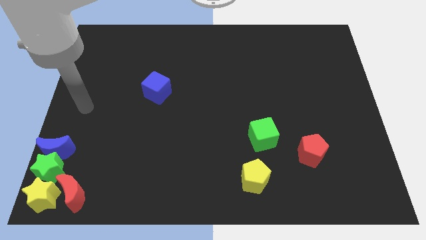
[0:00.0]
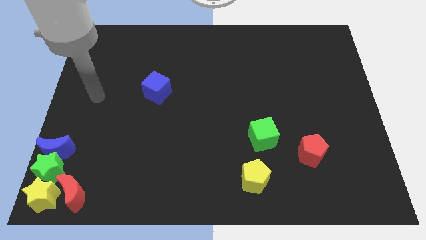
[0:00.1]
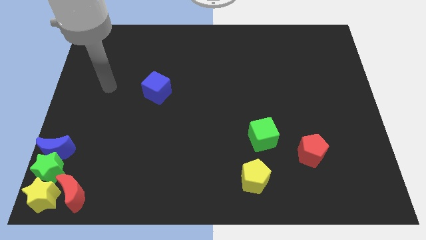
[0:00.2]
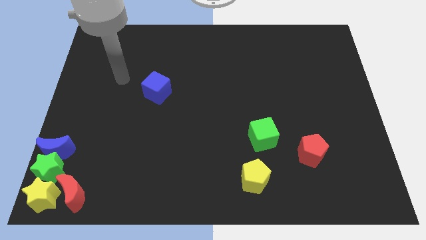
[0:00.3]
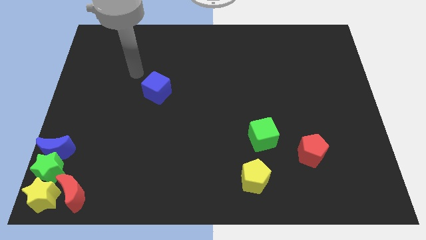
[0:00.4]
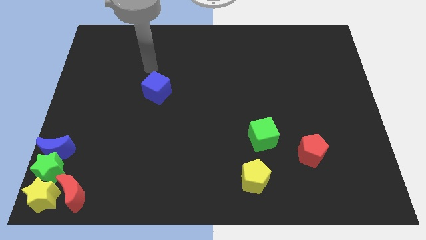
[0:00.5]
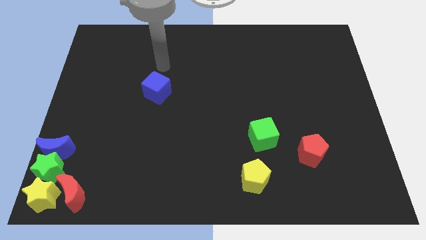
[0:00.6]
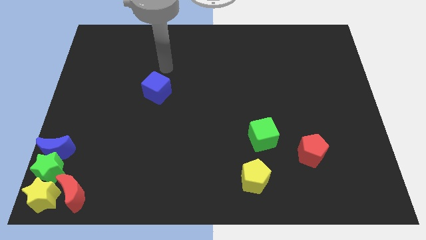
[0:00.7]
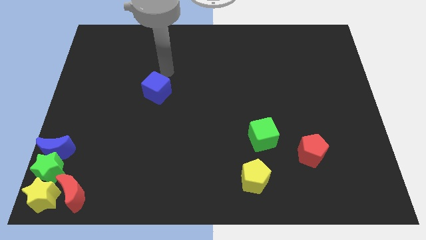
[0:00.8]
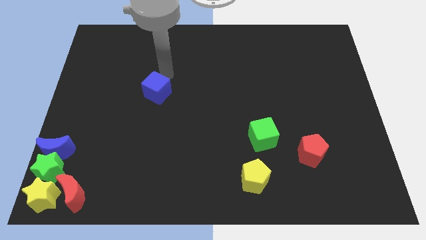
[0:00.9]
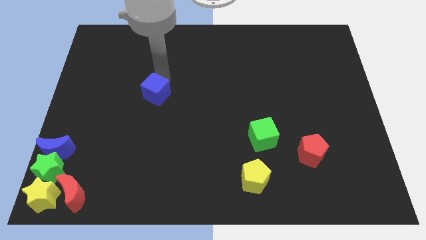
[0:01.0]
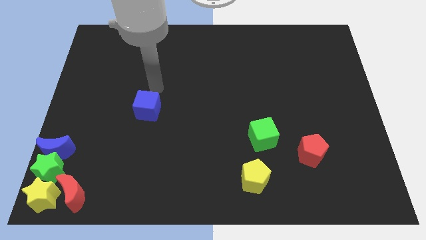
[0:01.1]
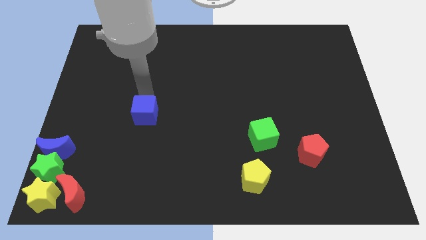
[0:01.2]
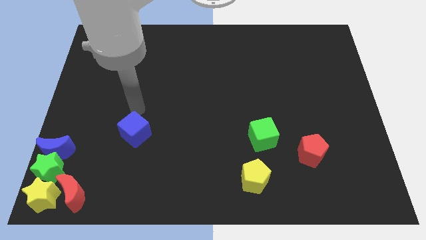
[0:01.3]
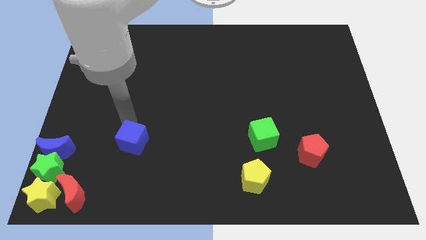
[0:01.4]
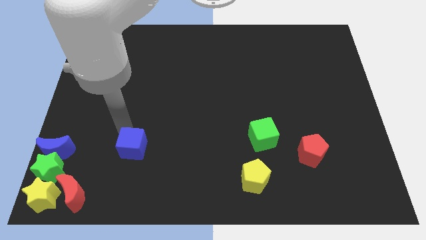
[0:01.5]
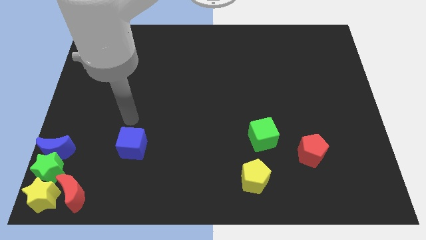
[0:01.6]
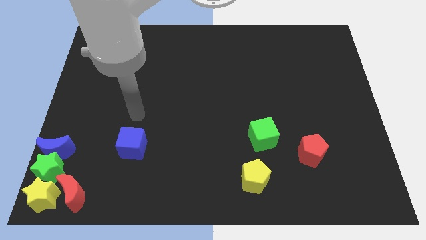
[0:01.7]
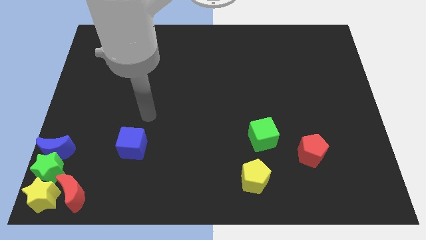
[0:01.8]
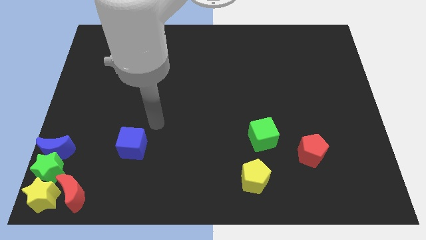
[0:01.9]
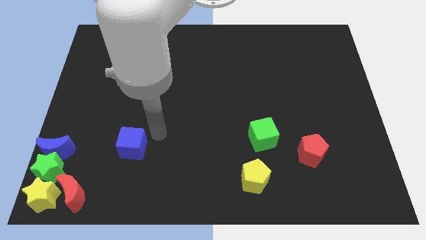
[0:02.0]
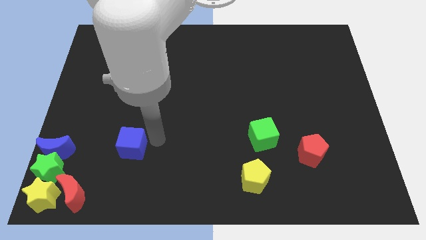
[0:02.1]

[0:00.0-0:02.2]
drag the blue cube to the right of the blue crescent

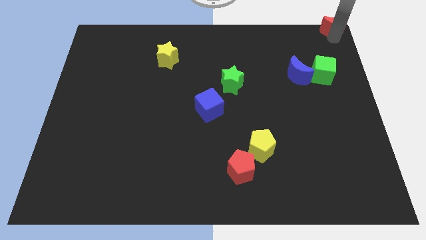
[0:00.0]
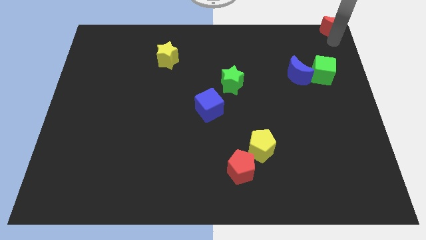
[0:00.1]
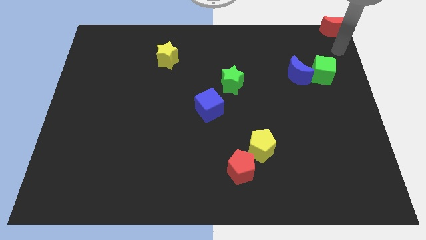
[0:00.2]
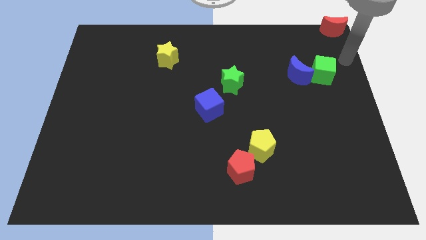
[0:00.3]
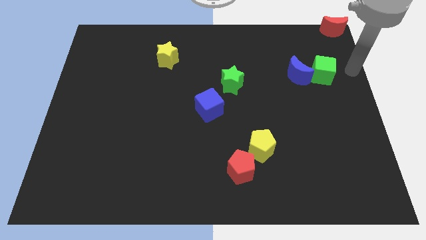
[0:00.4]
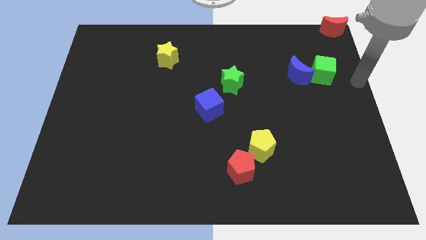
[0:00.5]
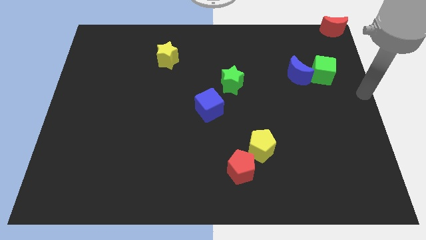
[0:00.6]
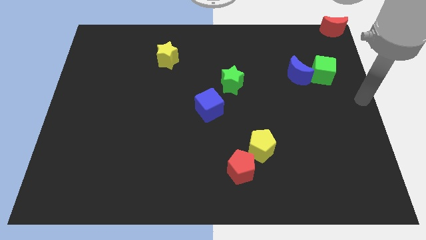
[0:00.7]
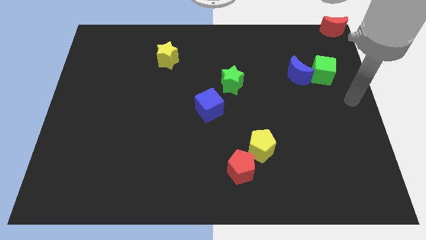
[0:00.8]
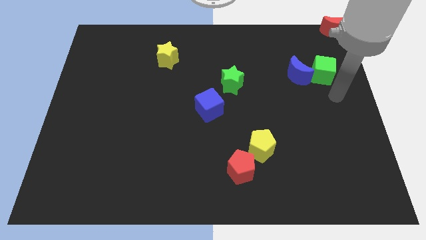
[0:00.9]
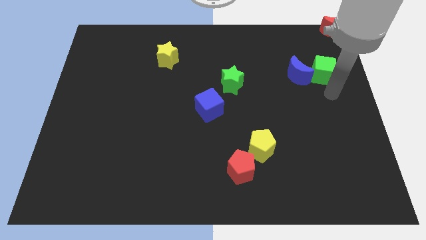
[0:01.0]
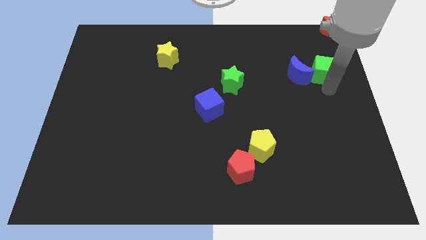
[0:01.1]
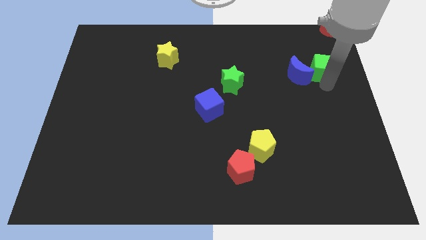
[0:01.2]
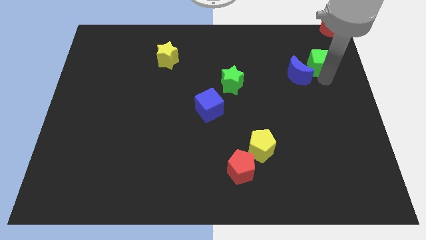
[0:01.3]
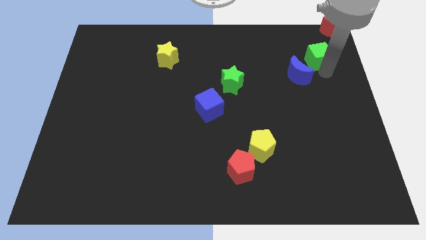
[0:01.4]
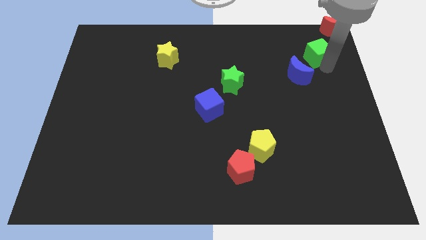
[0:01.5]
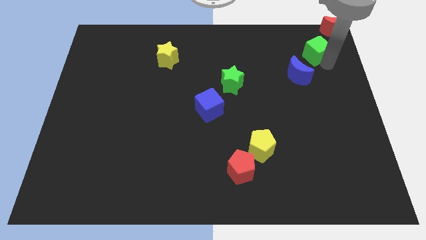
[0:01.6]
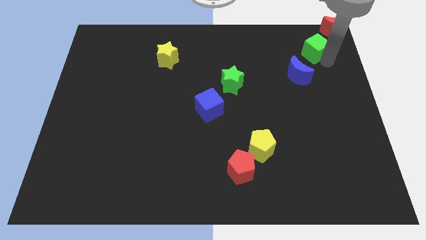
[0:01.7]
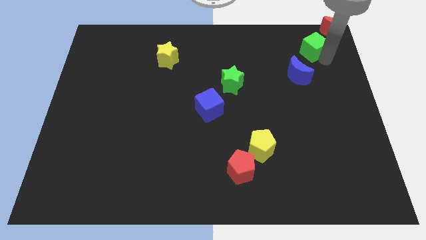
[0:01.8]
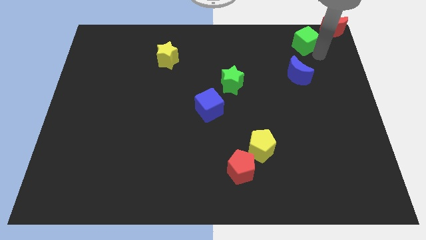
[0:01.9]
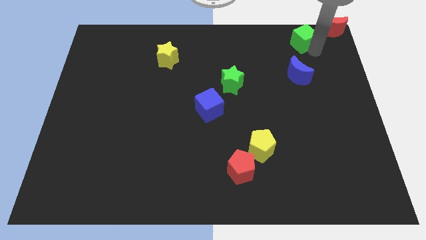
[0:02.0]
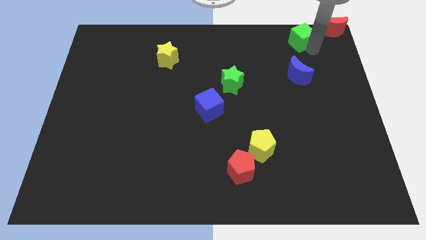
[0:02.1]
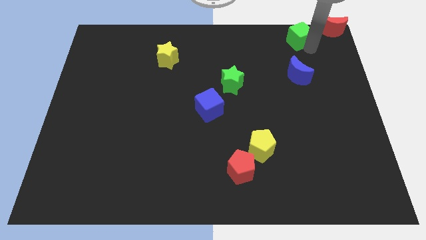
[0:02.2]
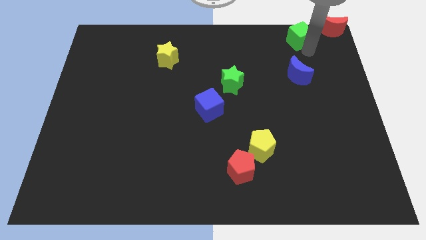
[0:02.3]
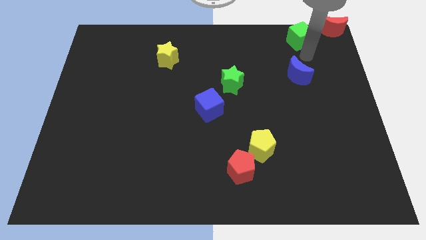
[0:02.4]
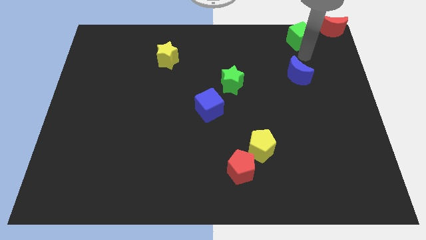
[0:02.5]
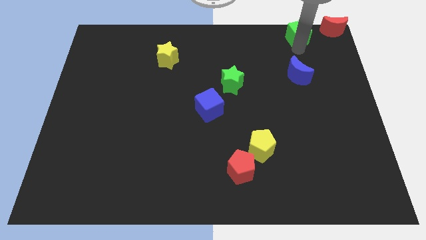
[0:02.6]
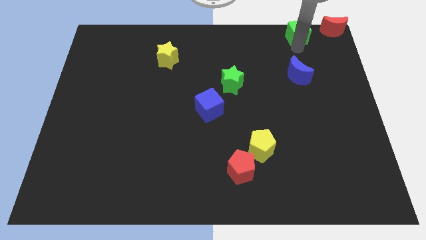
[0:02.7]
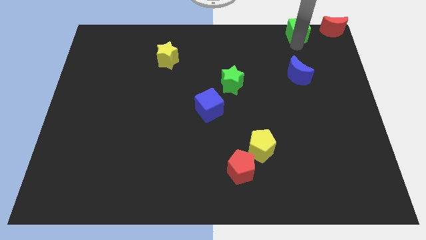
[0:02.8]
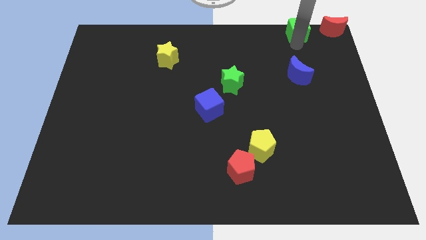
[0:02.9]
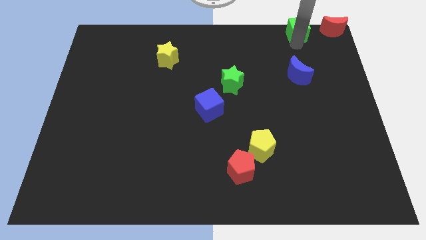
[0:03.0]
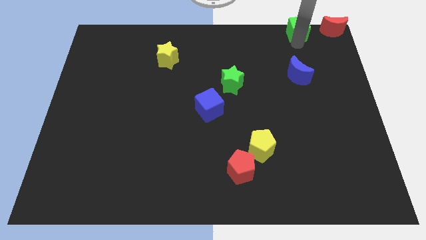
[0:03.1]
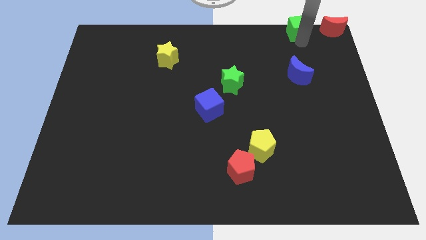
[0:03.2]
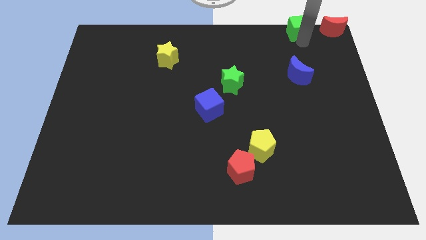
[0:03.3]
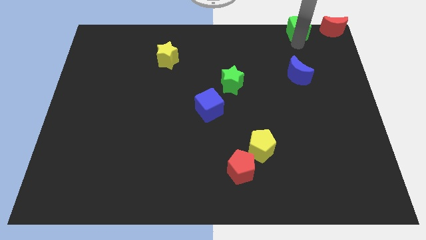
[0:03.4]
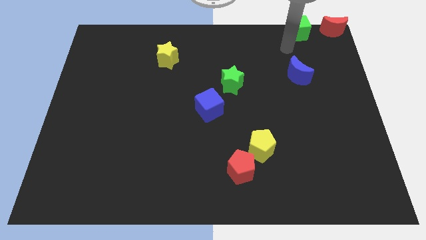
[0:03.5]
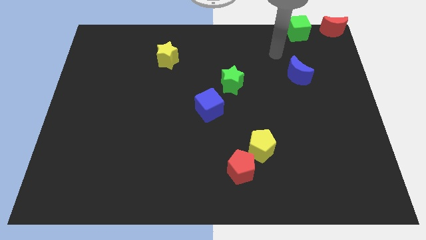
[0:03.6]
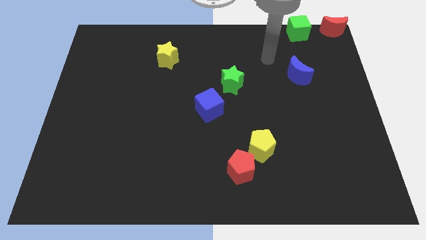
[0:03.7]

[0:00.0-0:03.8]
place green cube to the left of red moon

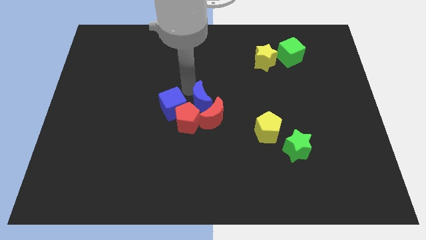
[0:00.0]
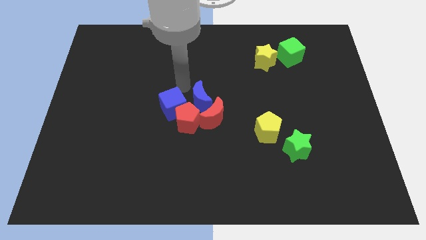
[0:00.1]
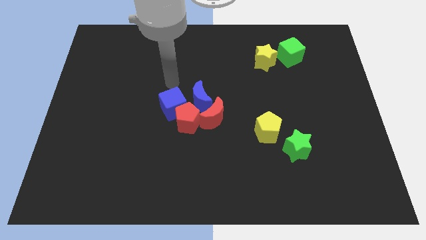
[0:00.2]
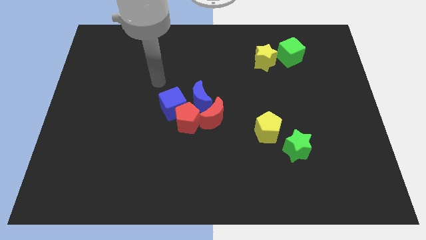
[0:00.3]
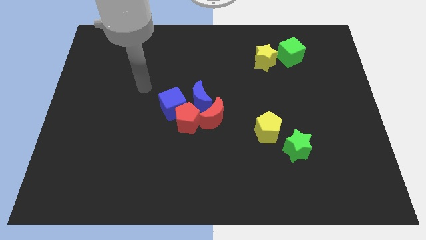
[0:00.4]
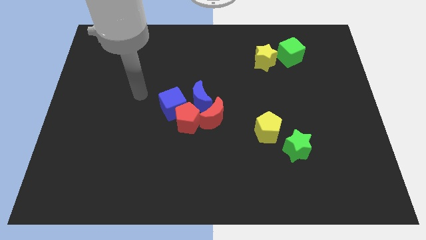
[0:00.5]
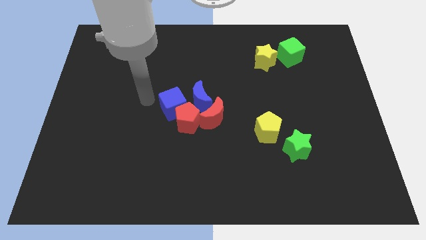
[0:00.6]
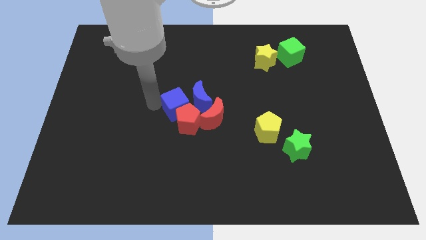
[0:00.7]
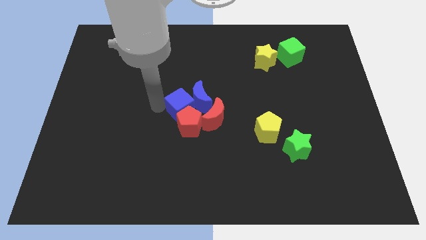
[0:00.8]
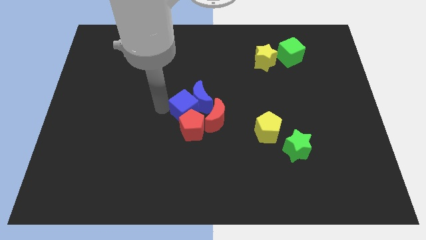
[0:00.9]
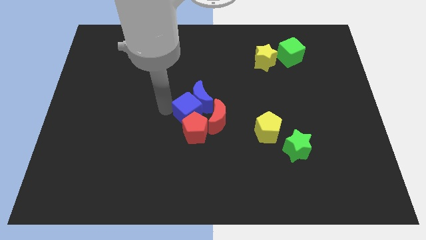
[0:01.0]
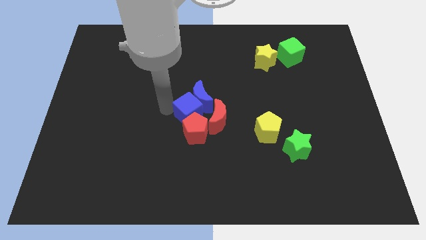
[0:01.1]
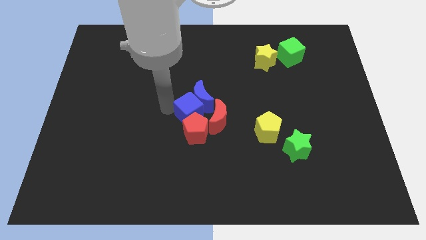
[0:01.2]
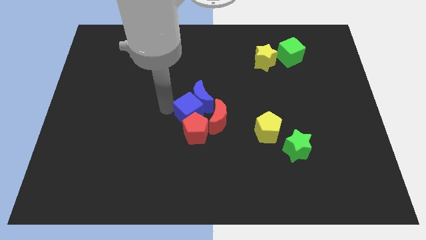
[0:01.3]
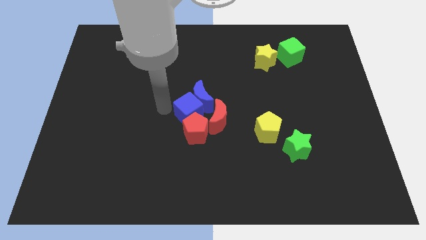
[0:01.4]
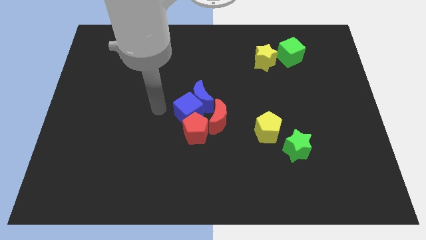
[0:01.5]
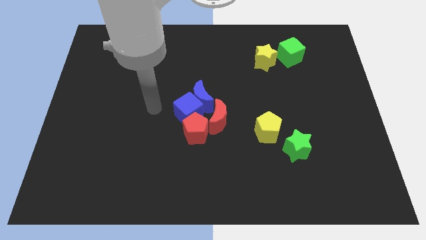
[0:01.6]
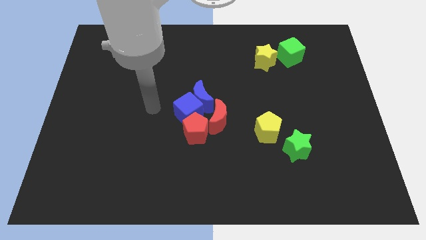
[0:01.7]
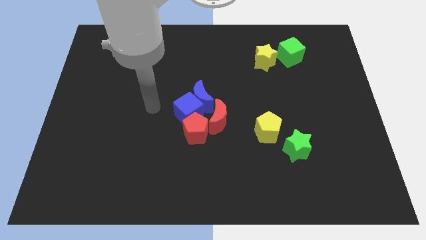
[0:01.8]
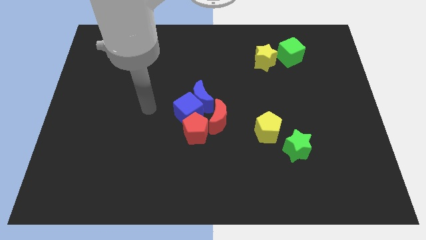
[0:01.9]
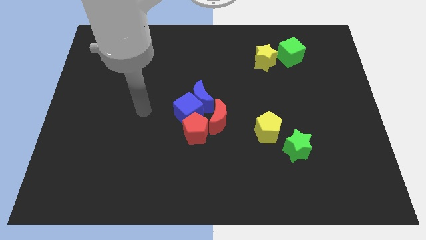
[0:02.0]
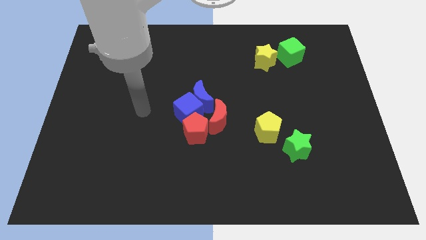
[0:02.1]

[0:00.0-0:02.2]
move group of blocks to the center of the board

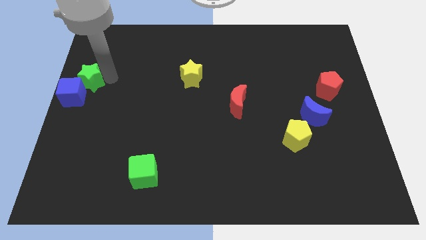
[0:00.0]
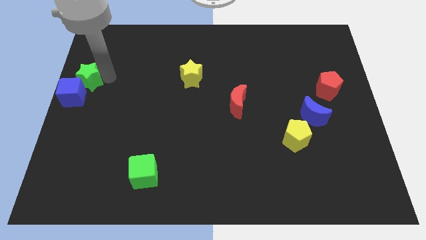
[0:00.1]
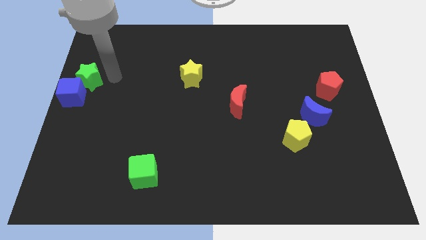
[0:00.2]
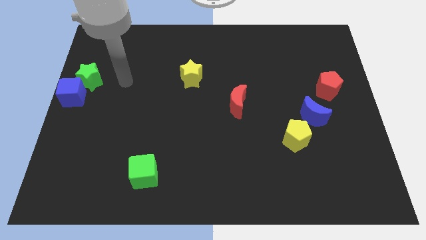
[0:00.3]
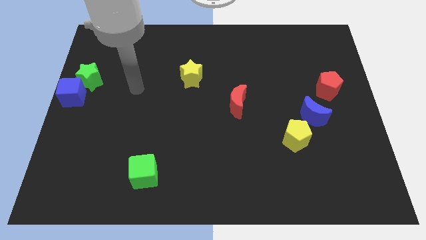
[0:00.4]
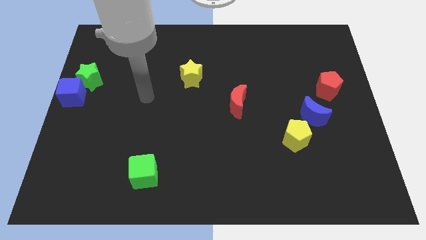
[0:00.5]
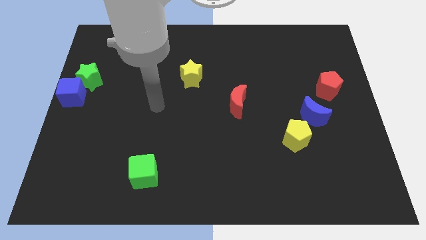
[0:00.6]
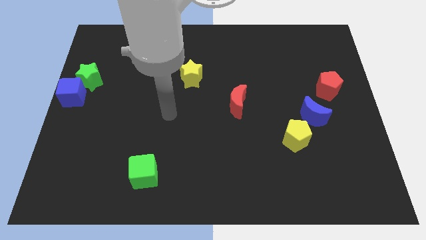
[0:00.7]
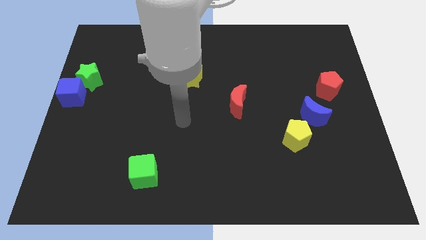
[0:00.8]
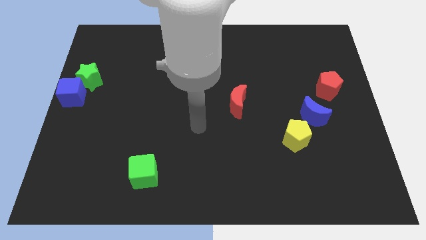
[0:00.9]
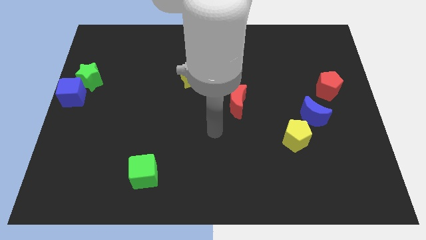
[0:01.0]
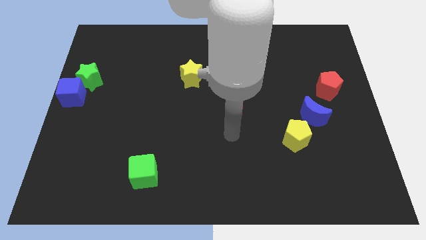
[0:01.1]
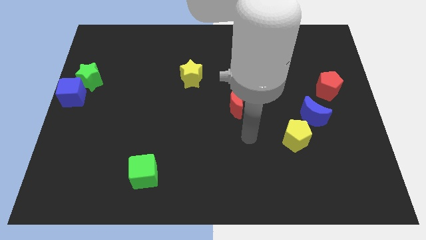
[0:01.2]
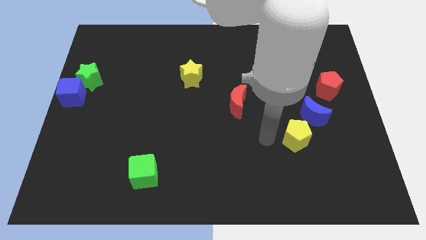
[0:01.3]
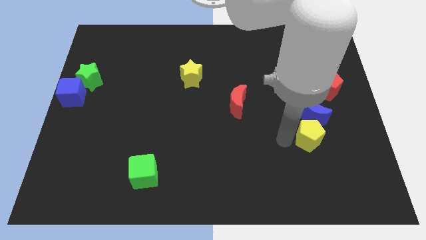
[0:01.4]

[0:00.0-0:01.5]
move your arm away from the green star
